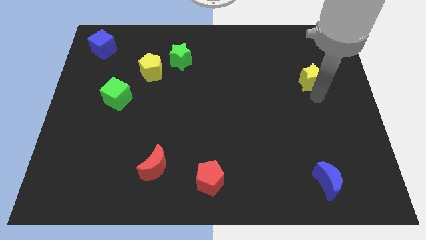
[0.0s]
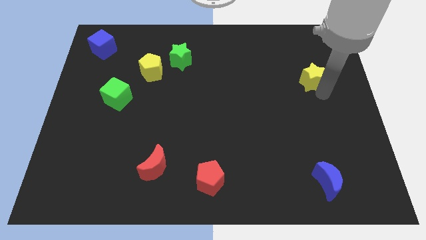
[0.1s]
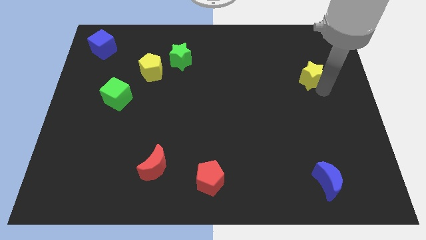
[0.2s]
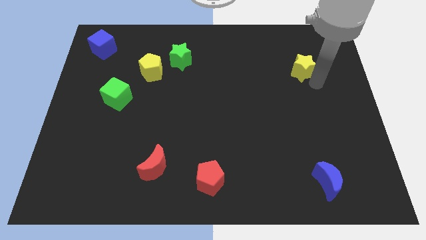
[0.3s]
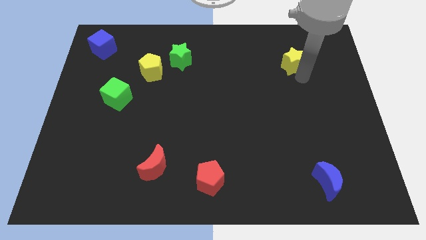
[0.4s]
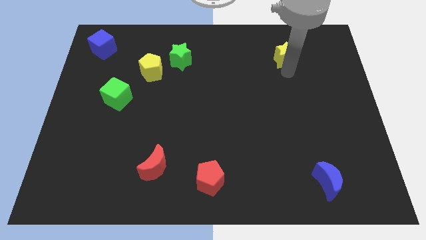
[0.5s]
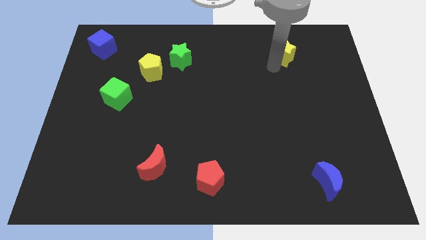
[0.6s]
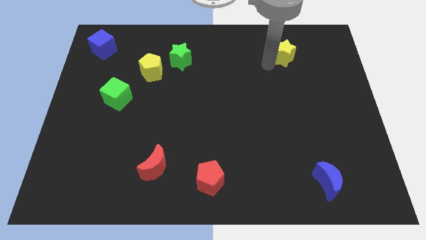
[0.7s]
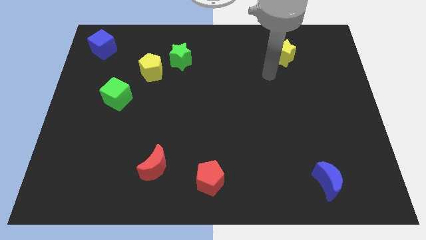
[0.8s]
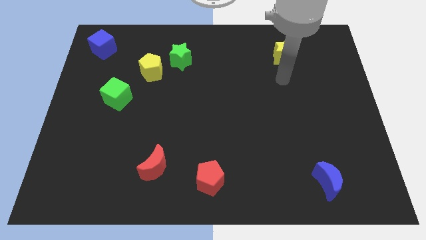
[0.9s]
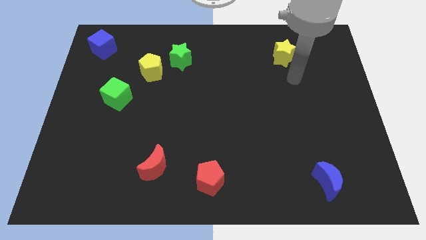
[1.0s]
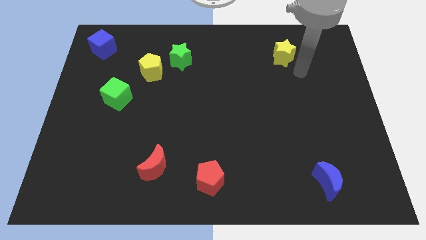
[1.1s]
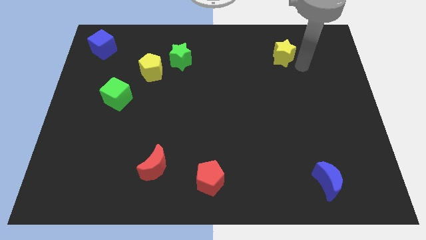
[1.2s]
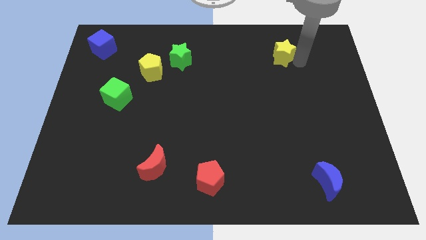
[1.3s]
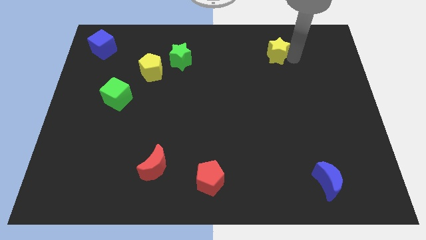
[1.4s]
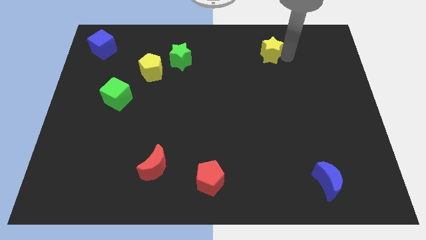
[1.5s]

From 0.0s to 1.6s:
push the yellow star upwards

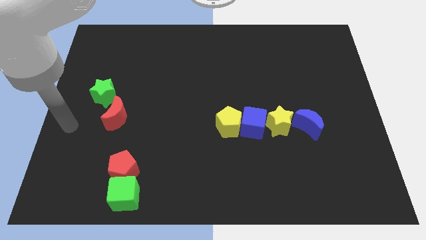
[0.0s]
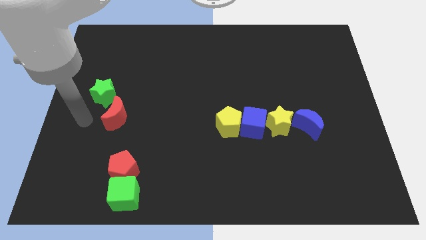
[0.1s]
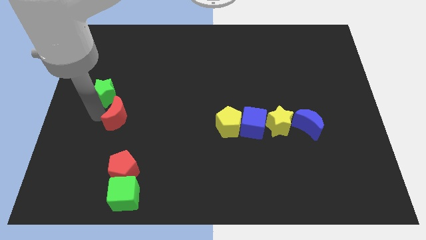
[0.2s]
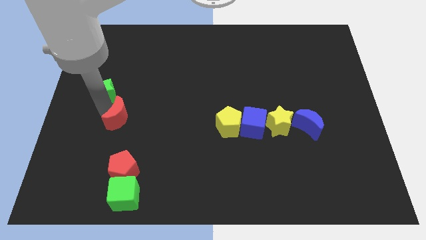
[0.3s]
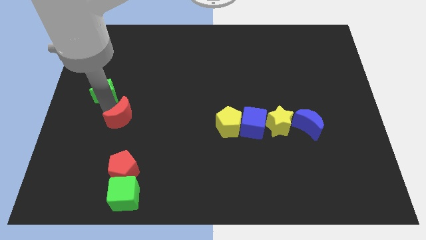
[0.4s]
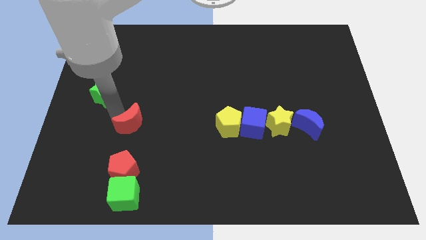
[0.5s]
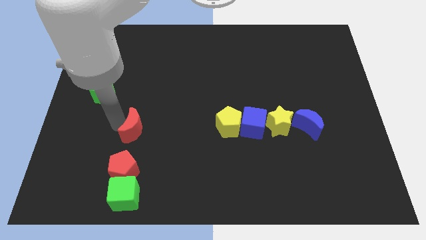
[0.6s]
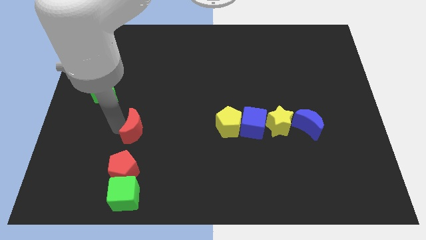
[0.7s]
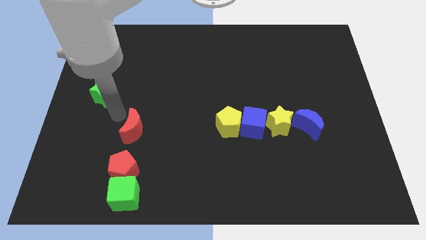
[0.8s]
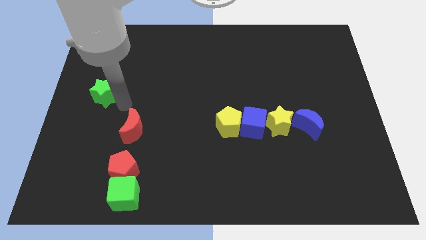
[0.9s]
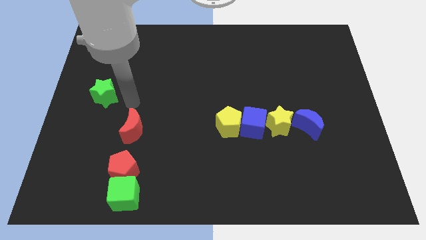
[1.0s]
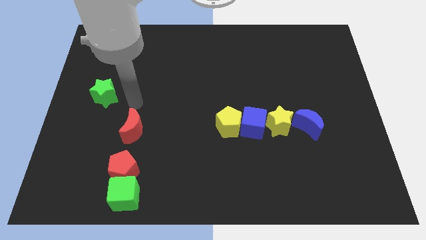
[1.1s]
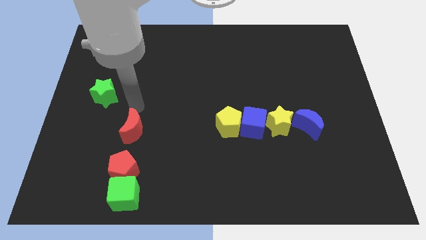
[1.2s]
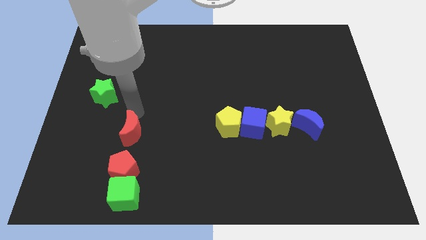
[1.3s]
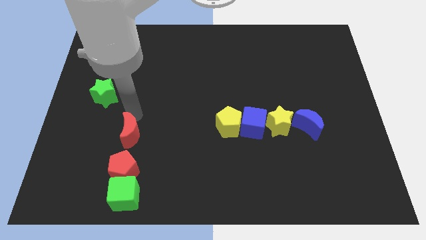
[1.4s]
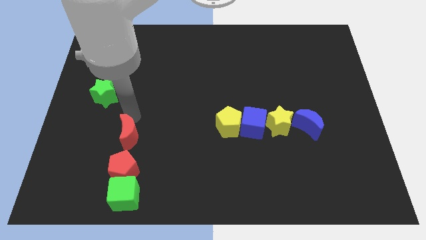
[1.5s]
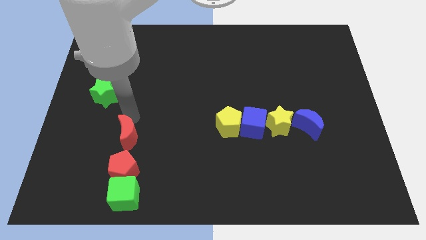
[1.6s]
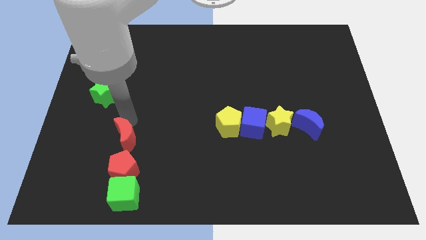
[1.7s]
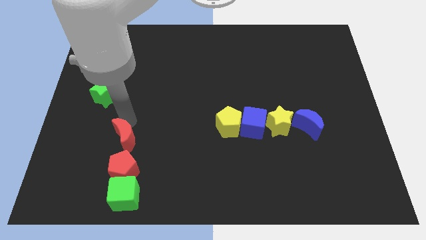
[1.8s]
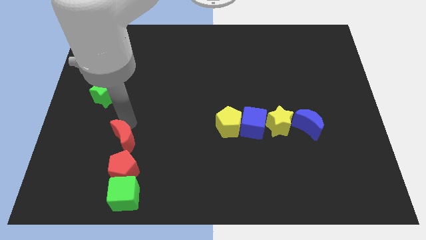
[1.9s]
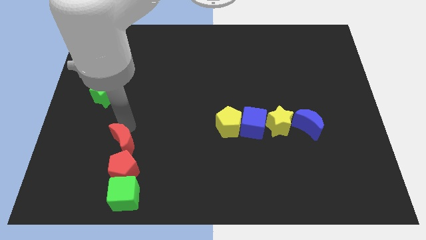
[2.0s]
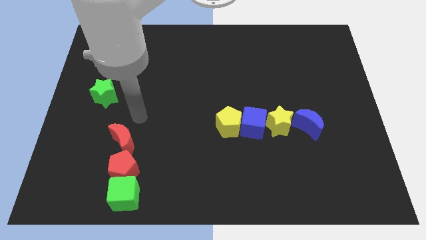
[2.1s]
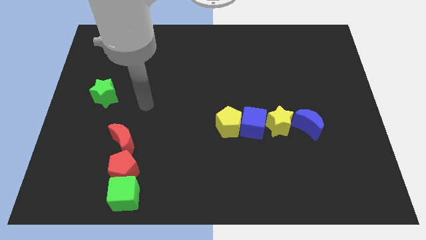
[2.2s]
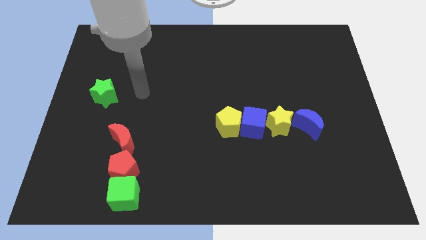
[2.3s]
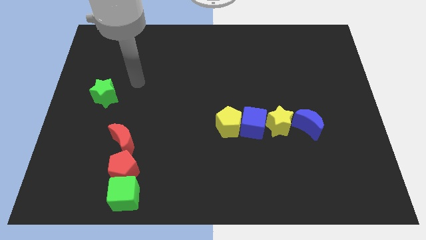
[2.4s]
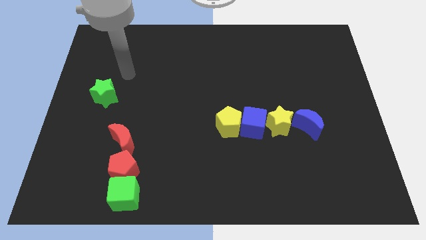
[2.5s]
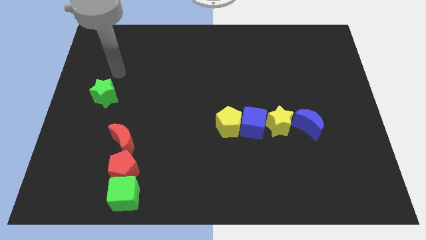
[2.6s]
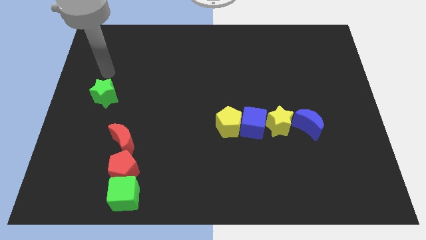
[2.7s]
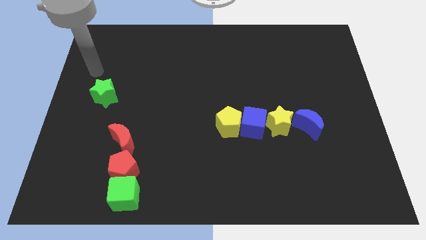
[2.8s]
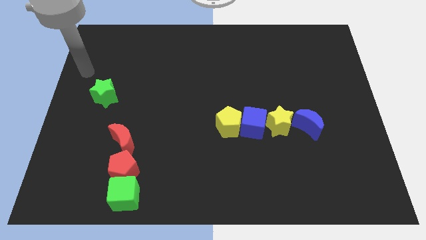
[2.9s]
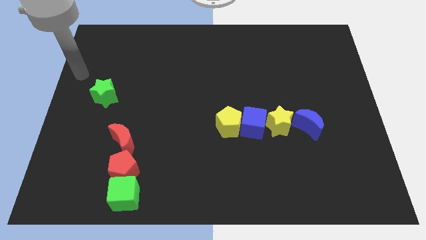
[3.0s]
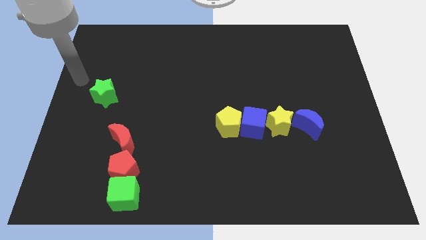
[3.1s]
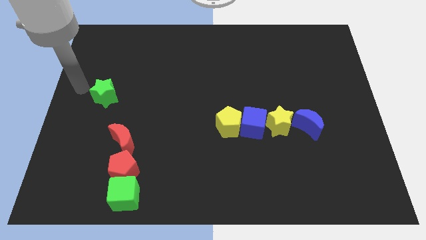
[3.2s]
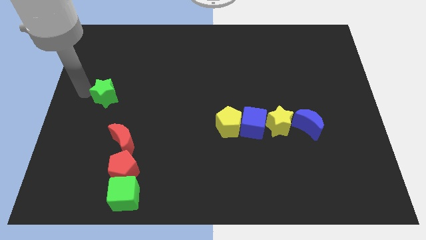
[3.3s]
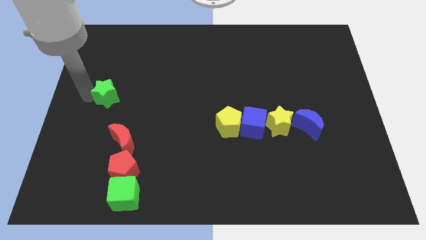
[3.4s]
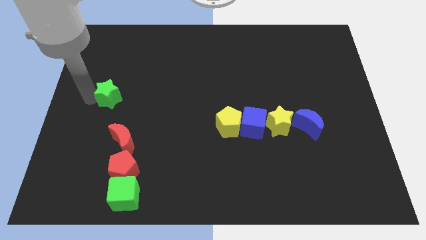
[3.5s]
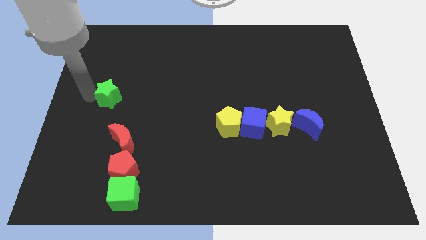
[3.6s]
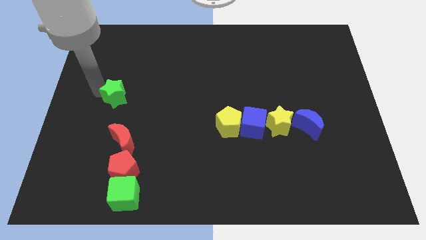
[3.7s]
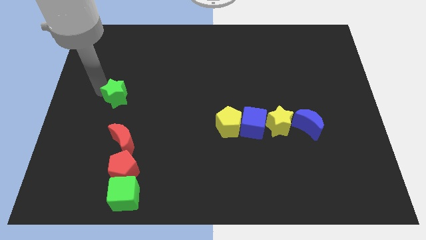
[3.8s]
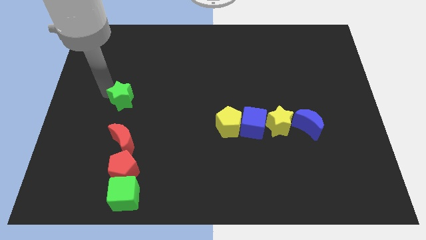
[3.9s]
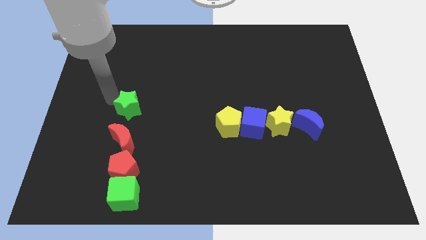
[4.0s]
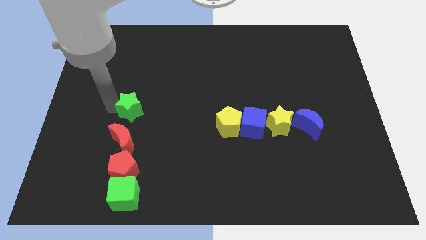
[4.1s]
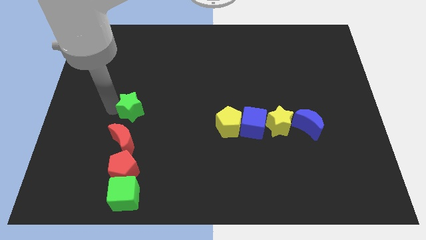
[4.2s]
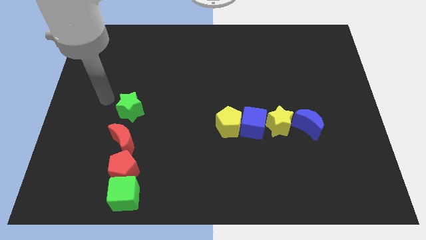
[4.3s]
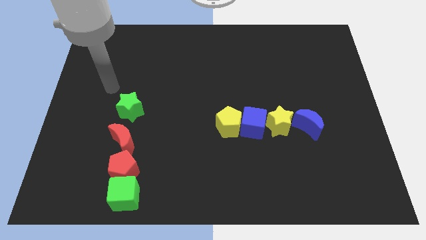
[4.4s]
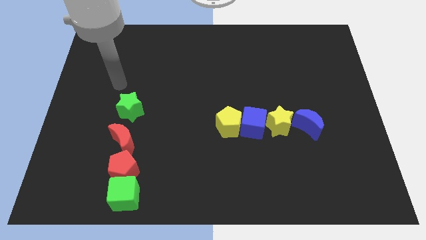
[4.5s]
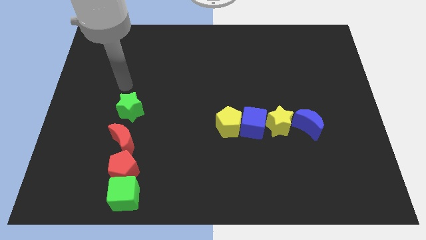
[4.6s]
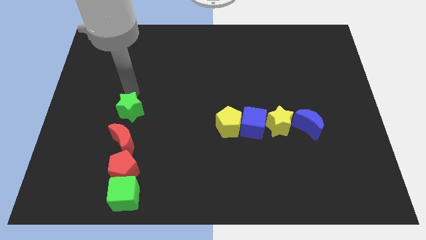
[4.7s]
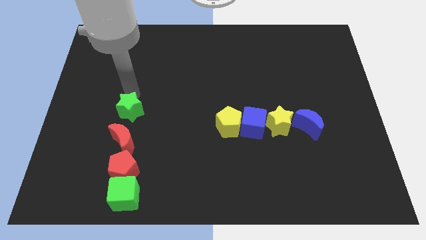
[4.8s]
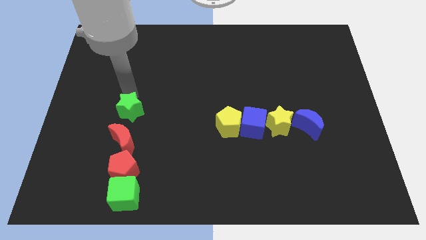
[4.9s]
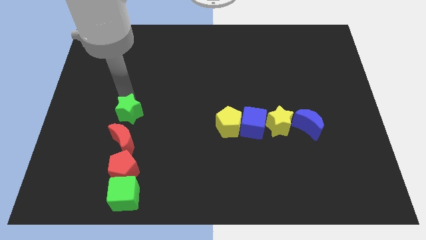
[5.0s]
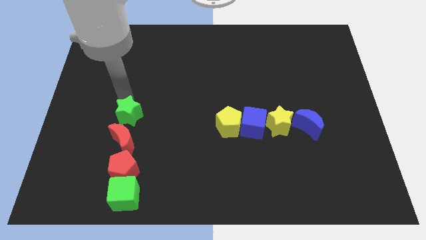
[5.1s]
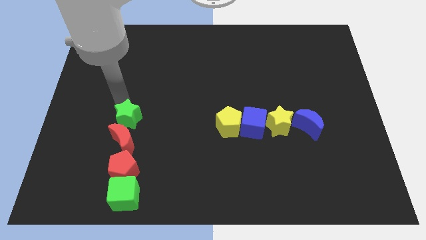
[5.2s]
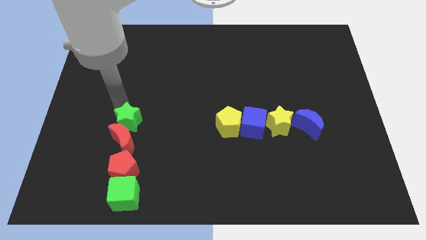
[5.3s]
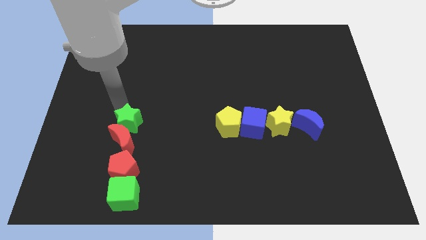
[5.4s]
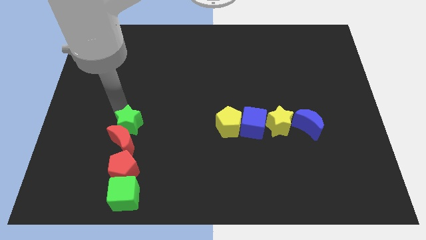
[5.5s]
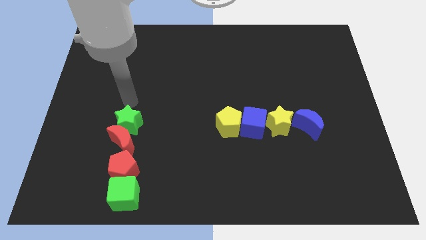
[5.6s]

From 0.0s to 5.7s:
place the red moon and green star together to form a straight line

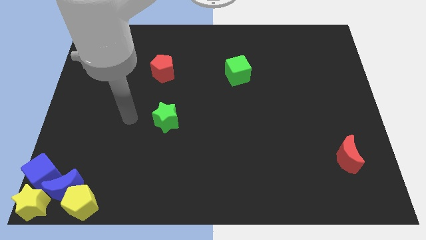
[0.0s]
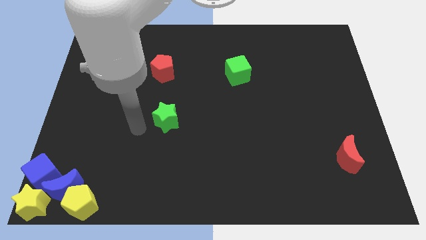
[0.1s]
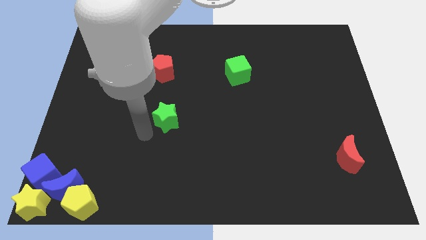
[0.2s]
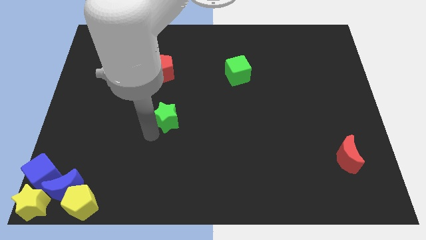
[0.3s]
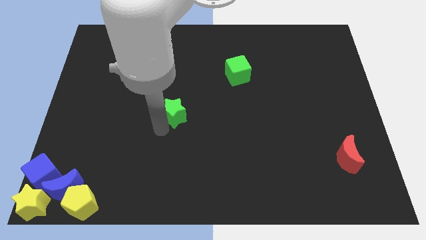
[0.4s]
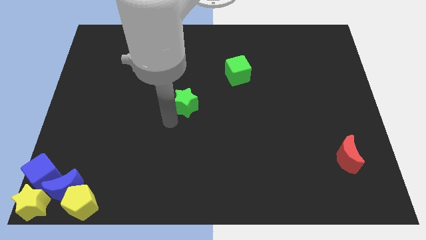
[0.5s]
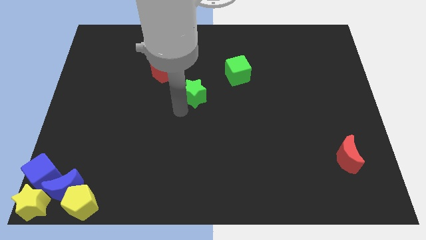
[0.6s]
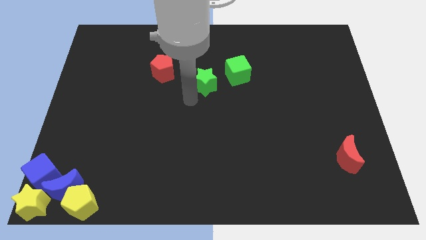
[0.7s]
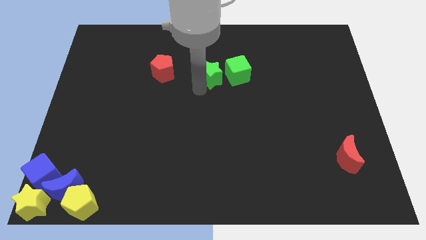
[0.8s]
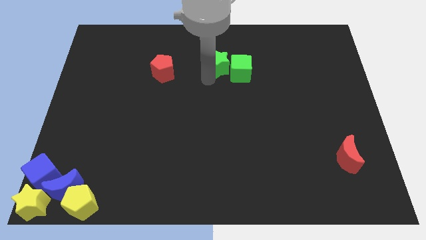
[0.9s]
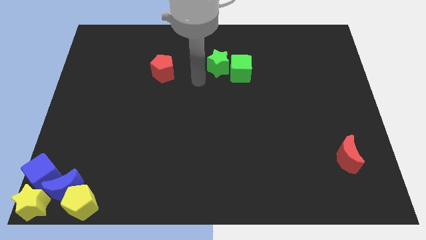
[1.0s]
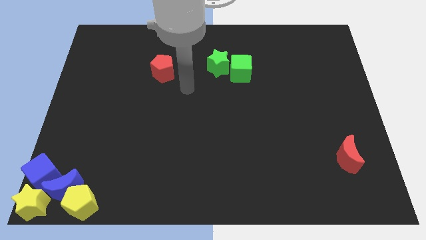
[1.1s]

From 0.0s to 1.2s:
move the green star in between red pentagon and green star

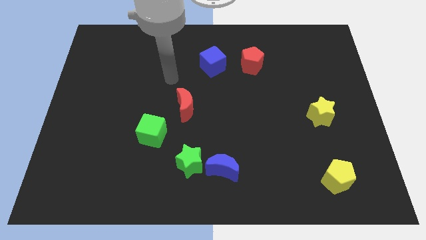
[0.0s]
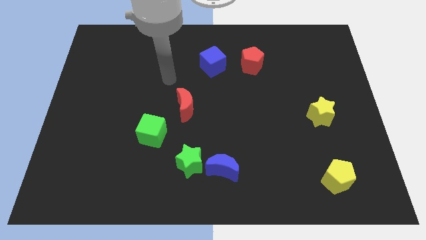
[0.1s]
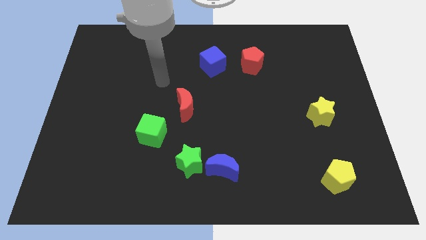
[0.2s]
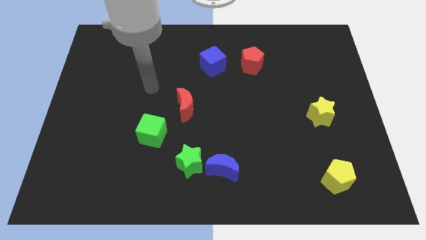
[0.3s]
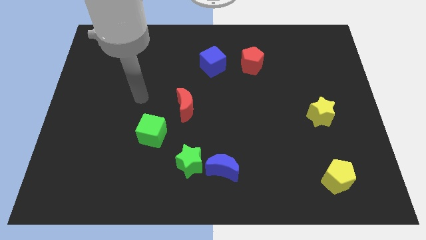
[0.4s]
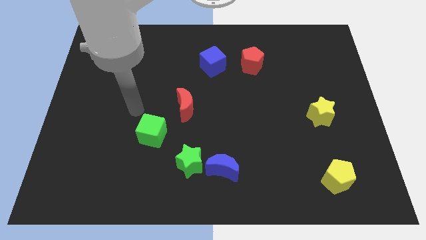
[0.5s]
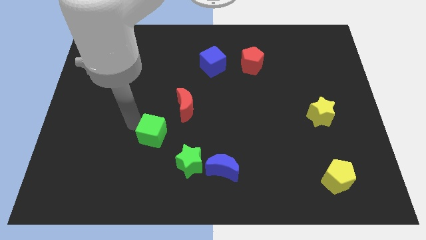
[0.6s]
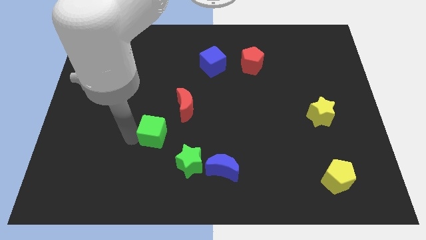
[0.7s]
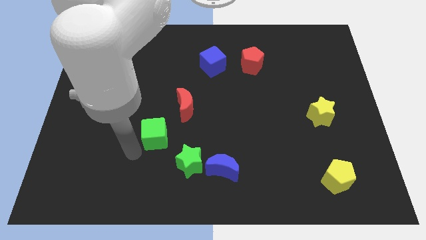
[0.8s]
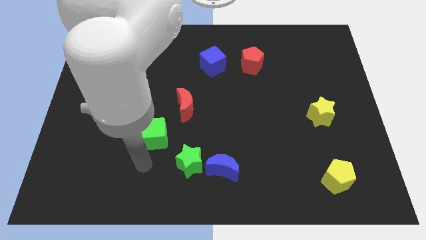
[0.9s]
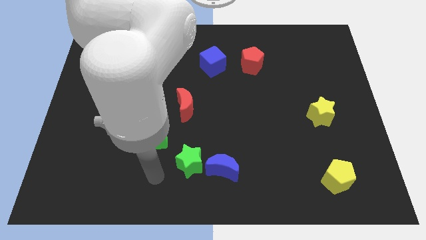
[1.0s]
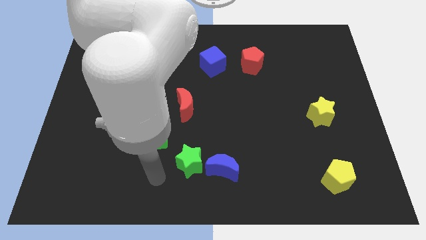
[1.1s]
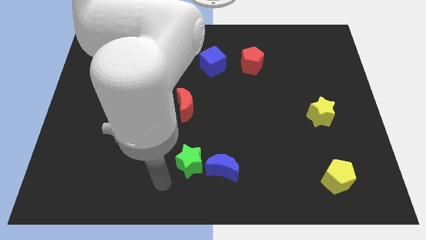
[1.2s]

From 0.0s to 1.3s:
point your arm at the left of the green star
